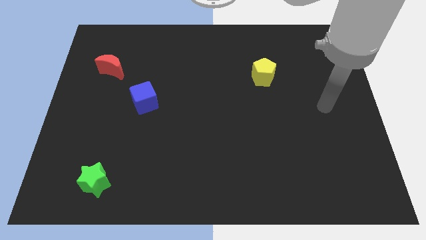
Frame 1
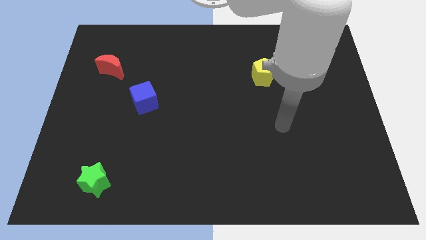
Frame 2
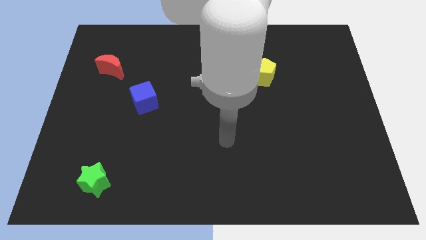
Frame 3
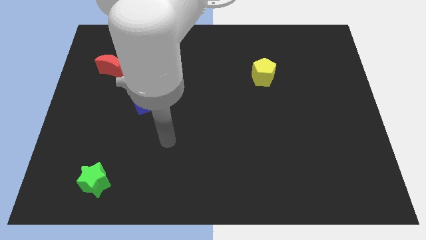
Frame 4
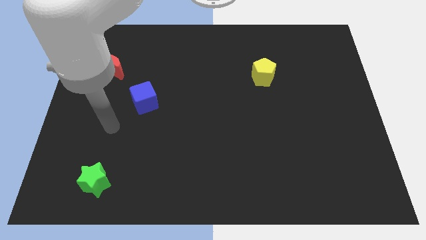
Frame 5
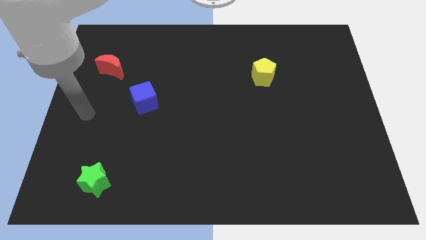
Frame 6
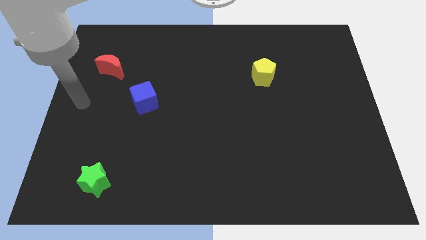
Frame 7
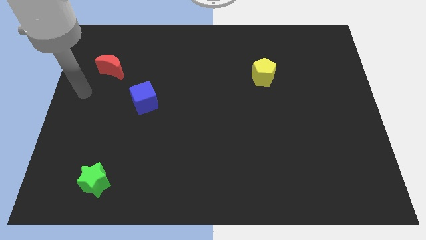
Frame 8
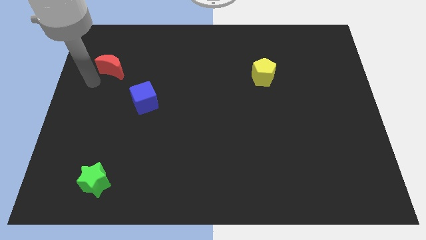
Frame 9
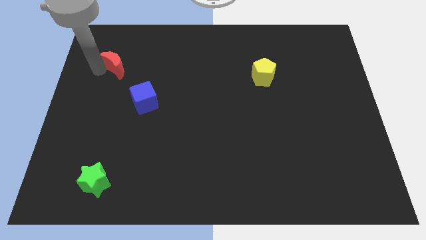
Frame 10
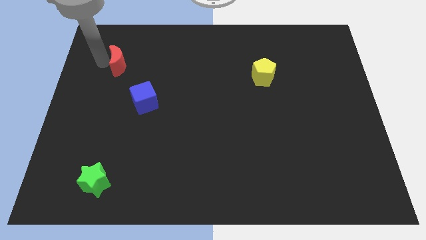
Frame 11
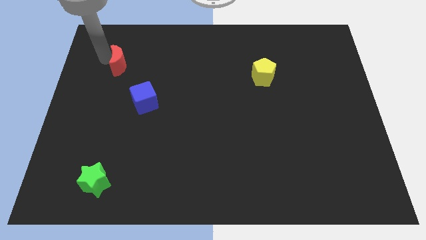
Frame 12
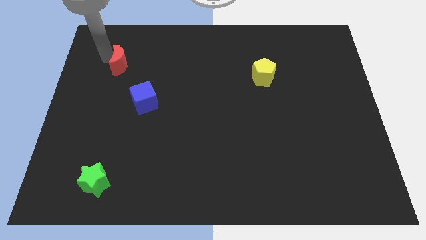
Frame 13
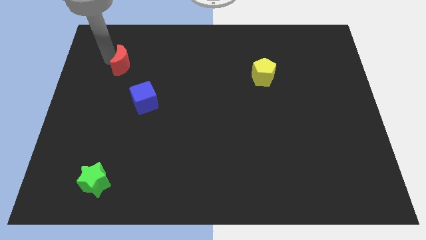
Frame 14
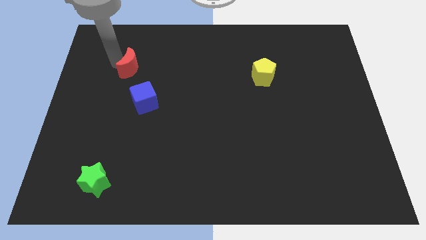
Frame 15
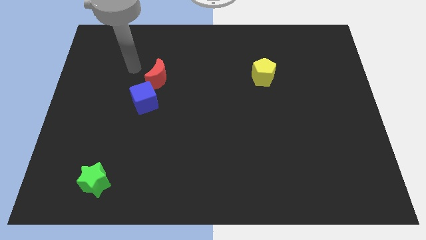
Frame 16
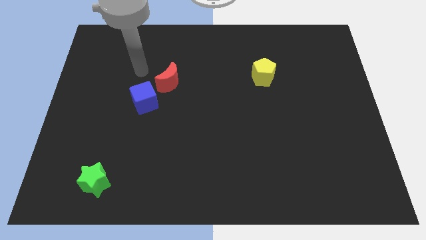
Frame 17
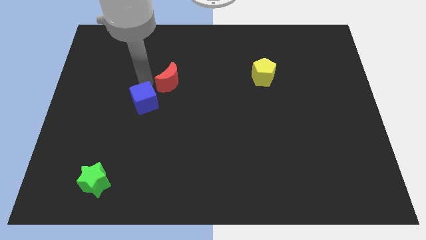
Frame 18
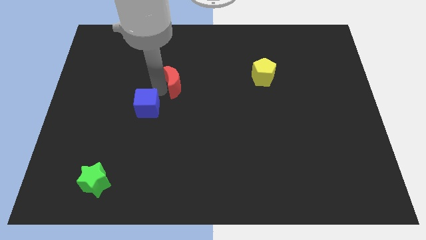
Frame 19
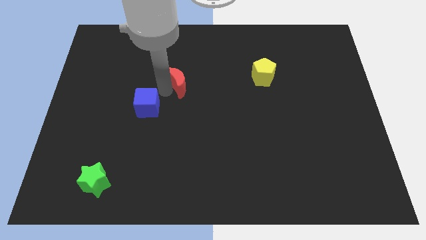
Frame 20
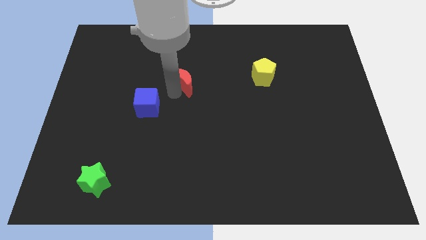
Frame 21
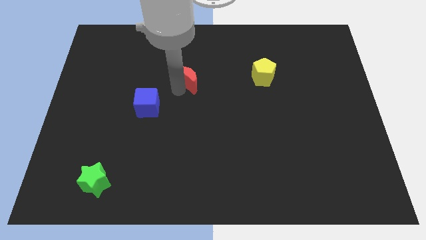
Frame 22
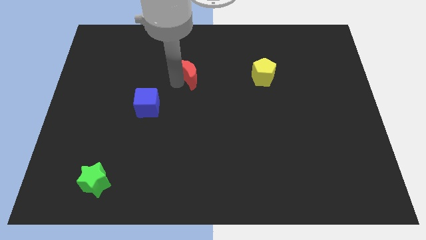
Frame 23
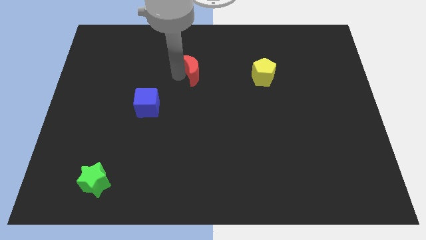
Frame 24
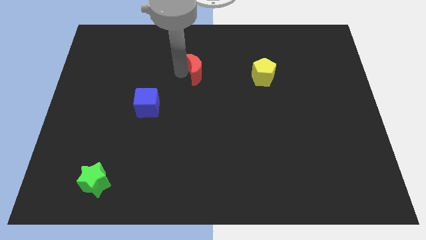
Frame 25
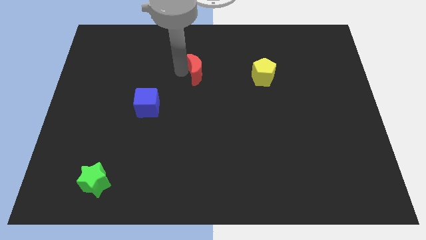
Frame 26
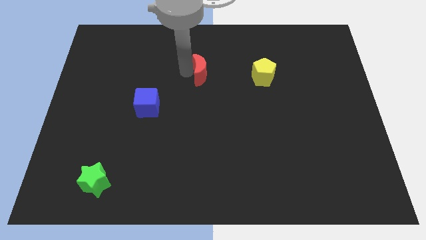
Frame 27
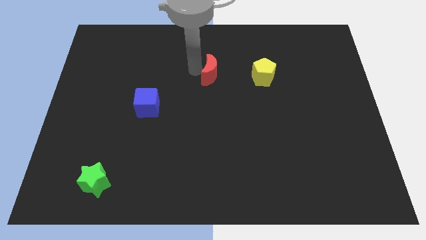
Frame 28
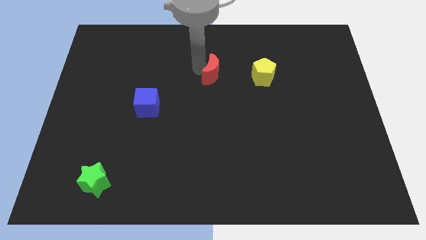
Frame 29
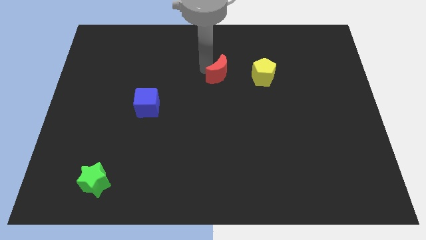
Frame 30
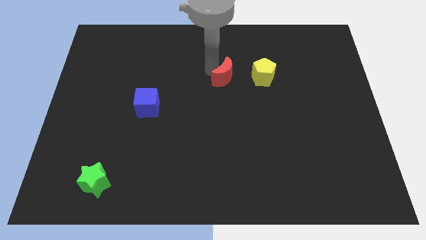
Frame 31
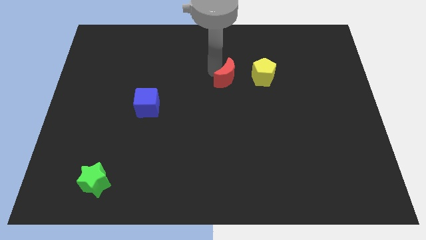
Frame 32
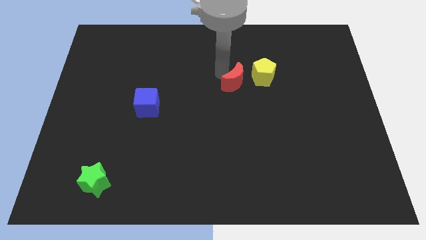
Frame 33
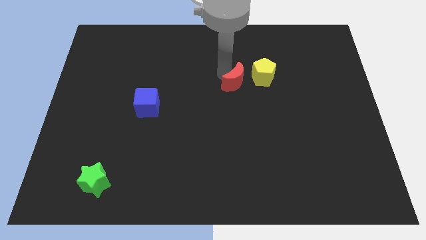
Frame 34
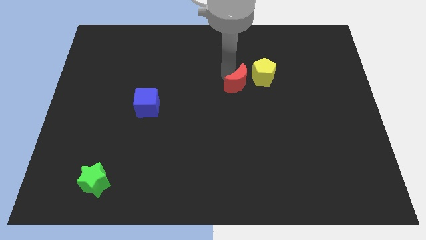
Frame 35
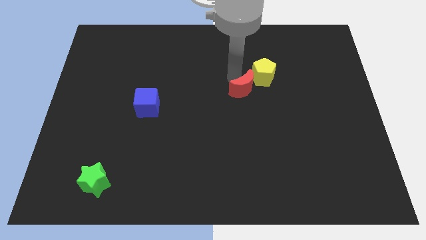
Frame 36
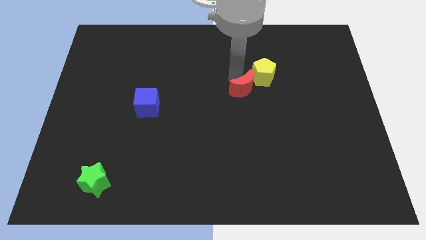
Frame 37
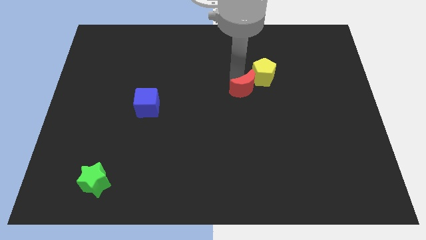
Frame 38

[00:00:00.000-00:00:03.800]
slide the red block next to the pentagon

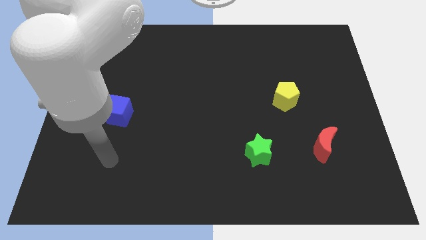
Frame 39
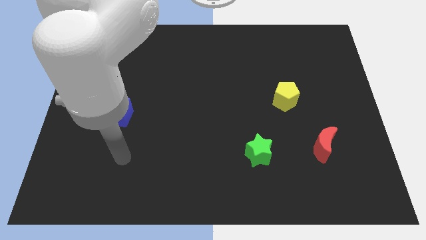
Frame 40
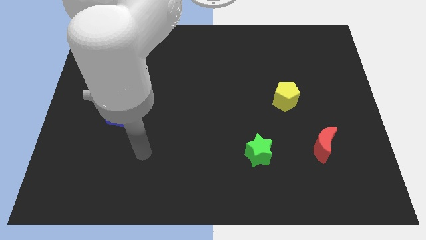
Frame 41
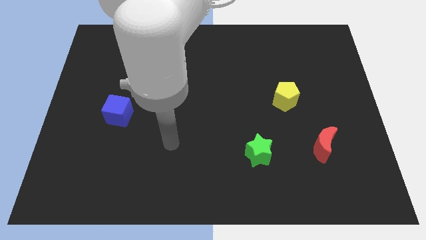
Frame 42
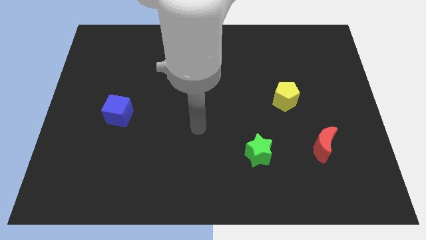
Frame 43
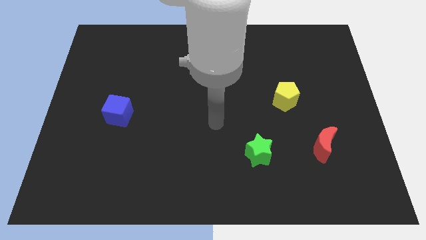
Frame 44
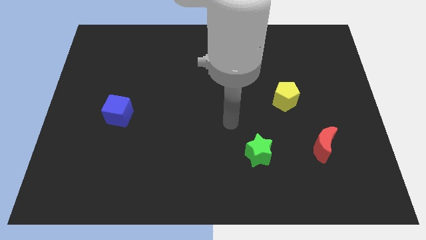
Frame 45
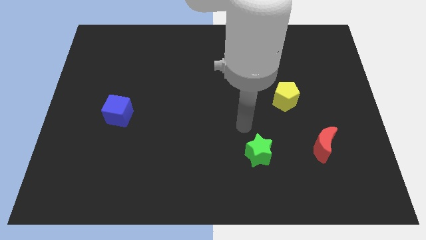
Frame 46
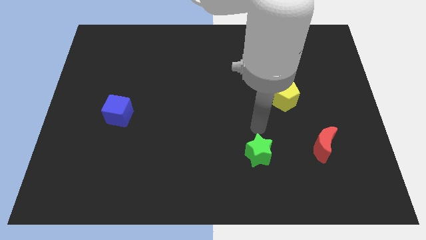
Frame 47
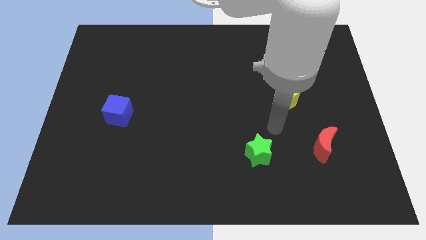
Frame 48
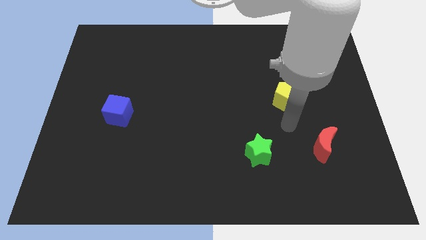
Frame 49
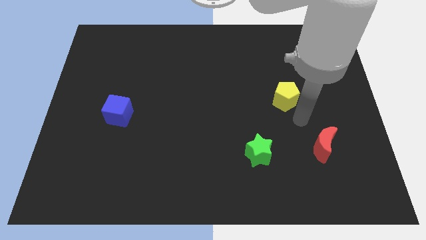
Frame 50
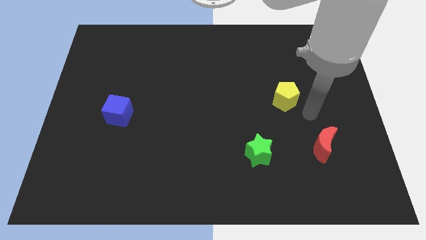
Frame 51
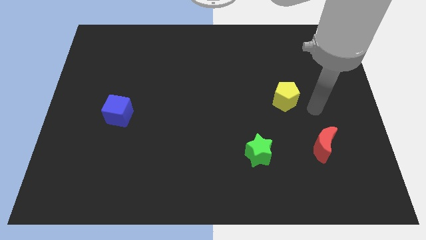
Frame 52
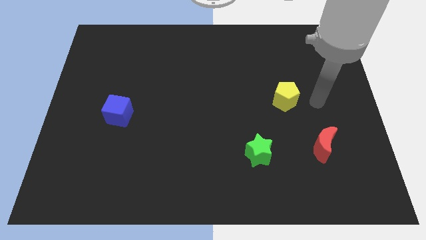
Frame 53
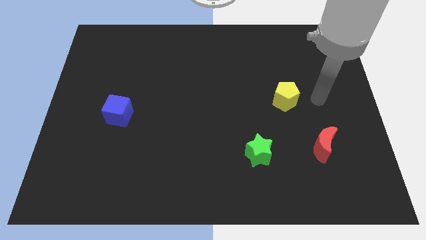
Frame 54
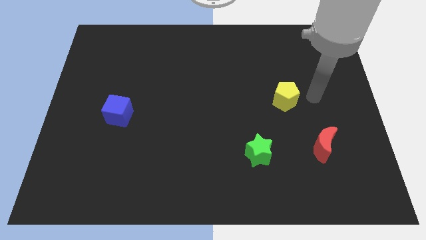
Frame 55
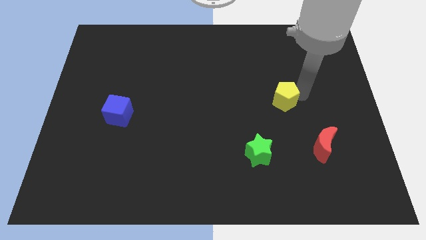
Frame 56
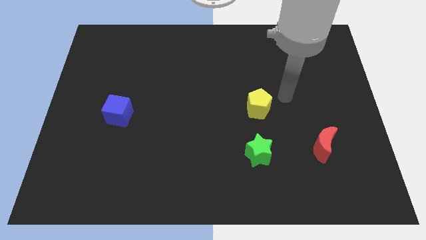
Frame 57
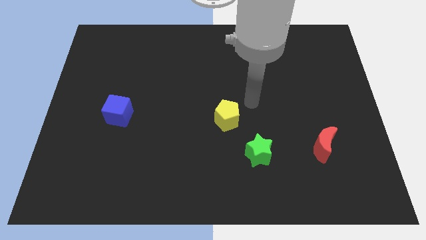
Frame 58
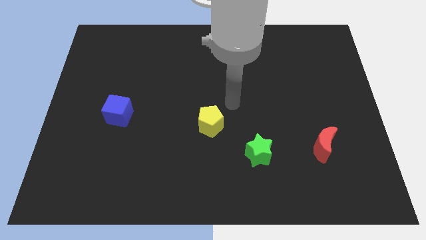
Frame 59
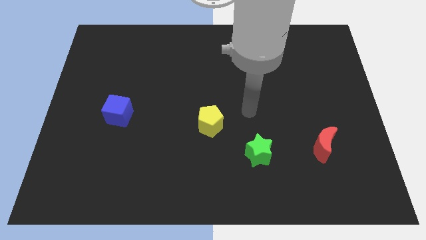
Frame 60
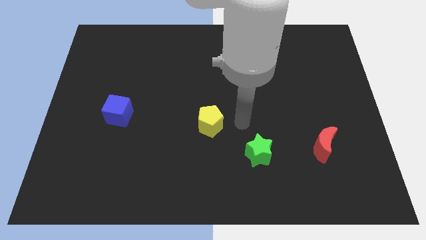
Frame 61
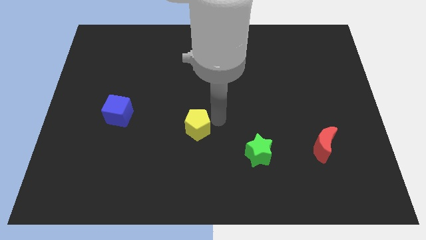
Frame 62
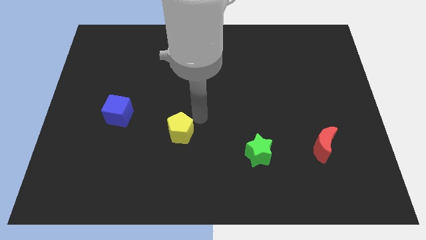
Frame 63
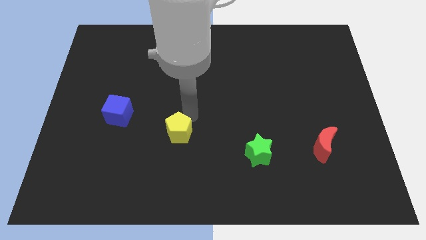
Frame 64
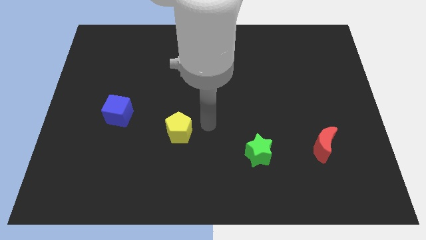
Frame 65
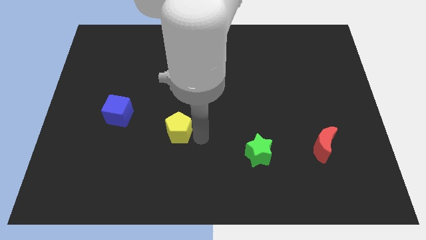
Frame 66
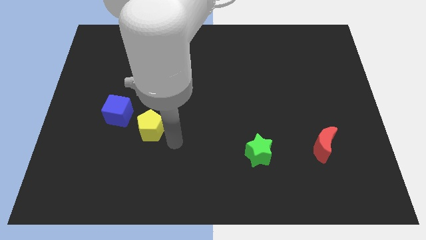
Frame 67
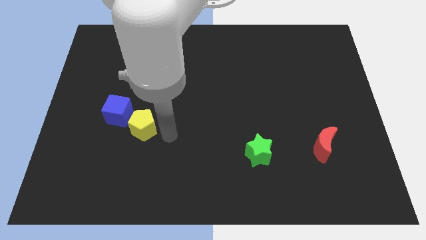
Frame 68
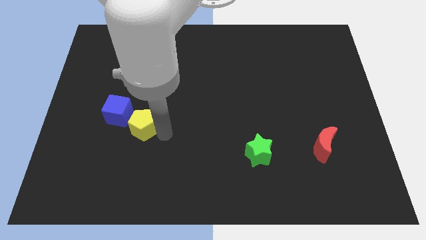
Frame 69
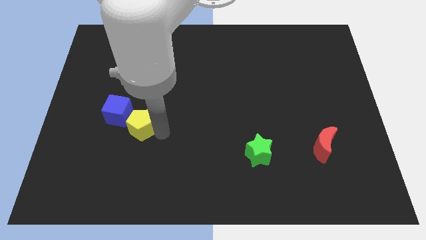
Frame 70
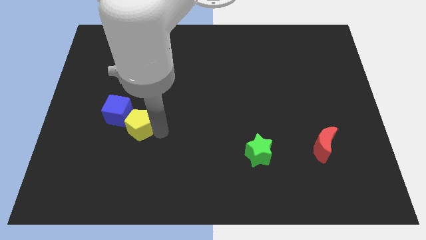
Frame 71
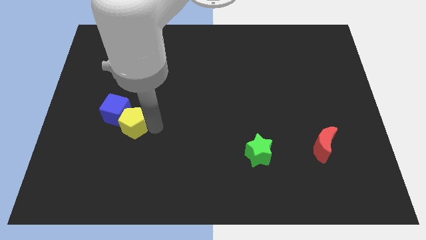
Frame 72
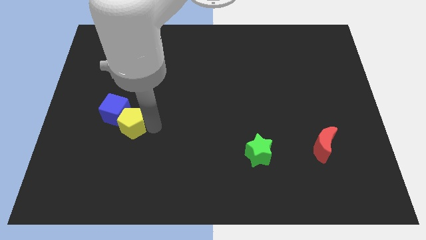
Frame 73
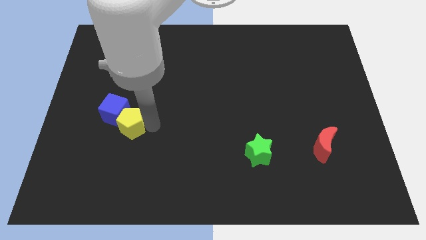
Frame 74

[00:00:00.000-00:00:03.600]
slide the yellow block to the blue block

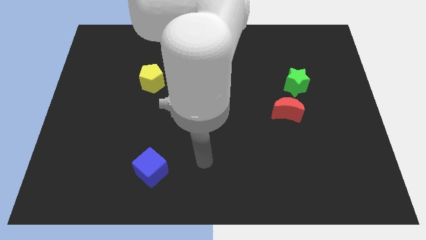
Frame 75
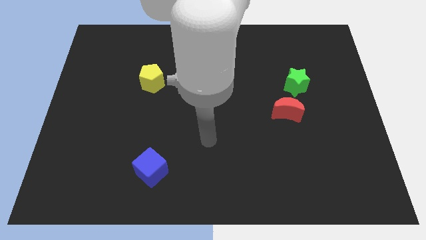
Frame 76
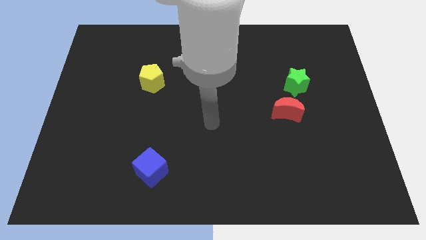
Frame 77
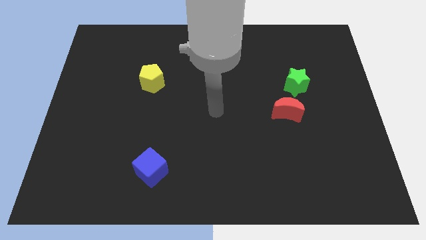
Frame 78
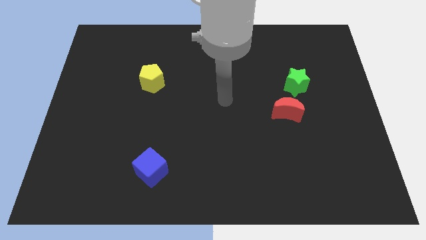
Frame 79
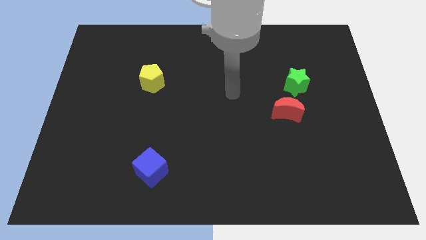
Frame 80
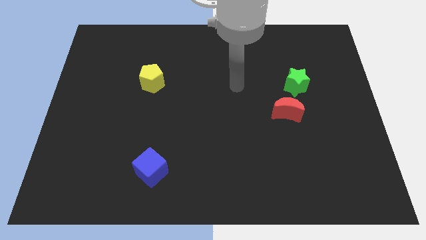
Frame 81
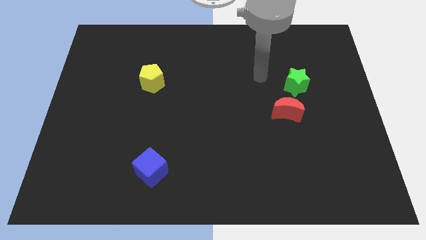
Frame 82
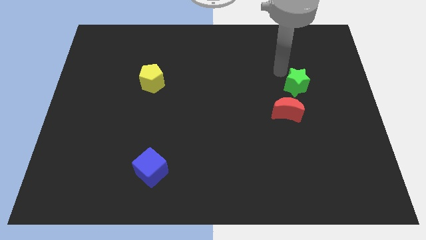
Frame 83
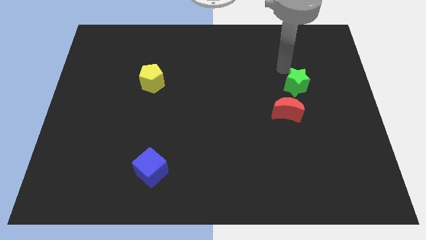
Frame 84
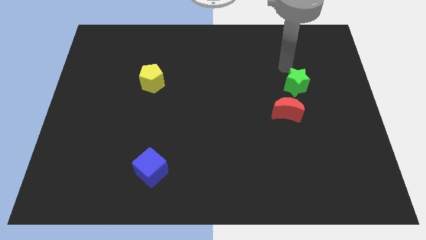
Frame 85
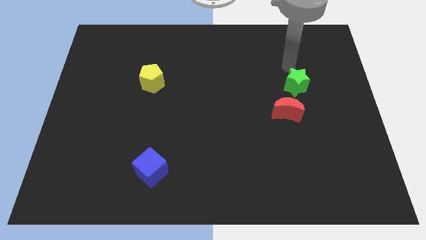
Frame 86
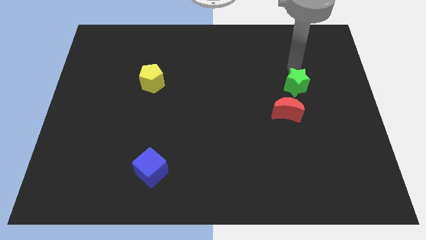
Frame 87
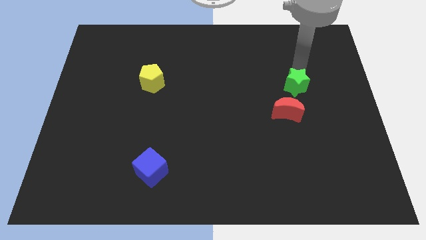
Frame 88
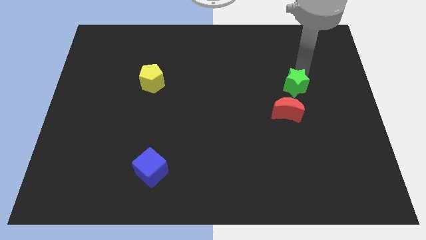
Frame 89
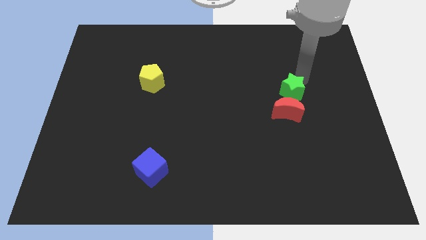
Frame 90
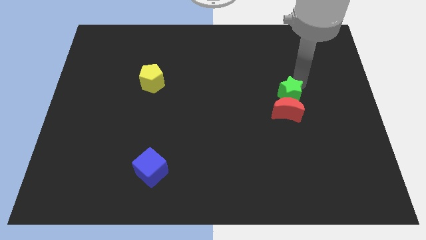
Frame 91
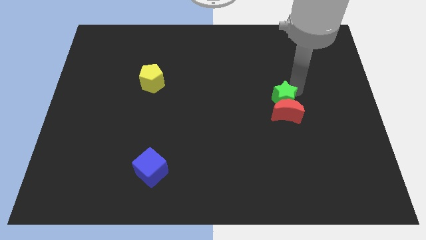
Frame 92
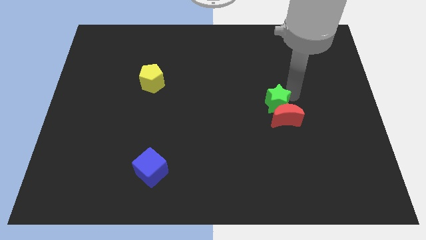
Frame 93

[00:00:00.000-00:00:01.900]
slide the green block to the red block
